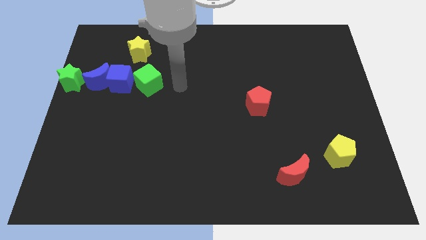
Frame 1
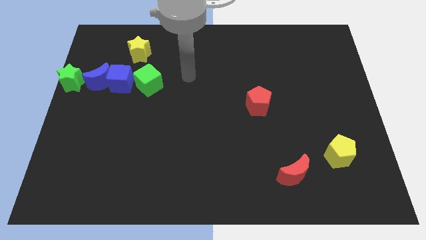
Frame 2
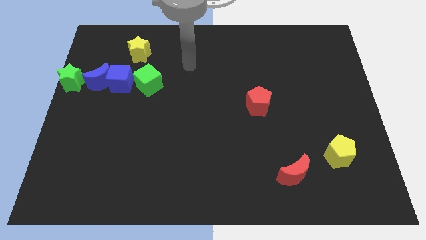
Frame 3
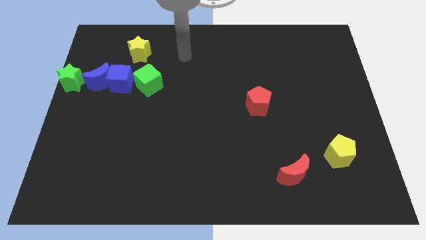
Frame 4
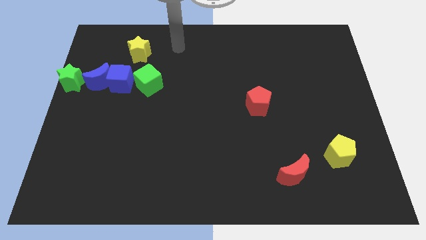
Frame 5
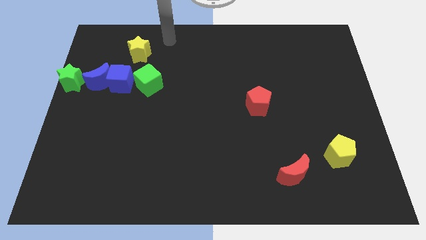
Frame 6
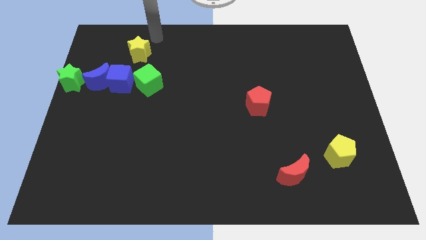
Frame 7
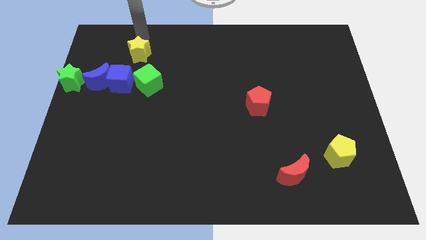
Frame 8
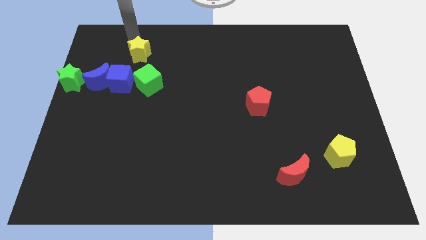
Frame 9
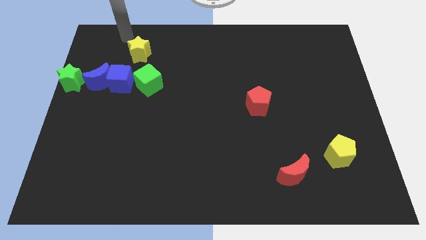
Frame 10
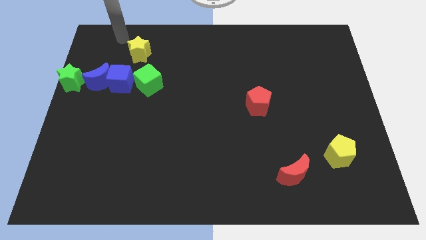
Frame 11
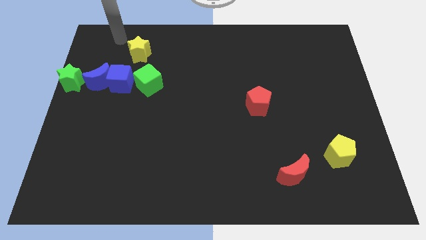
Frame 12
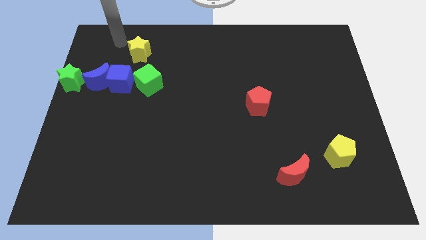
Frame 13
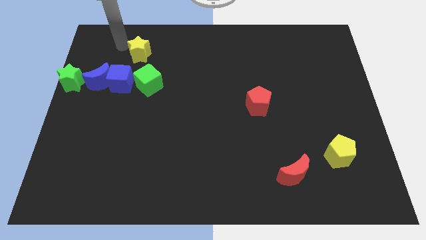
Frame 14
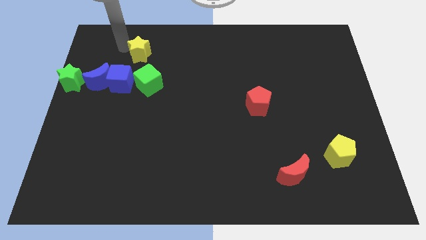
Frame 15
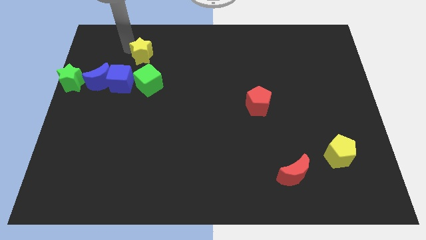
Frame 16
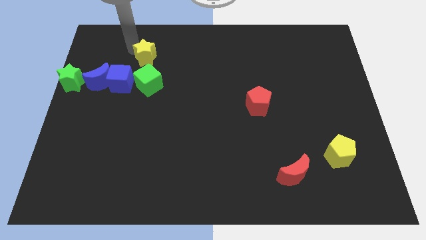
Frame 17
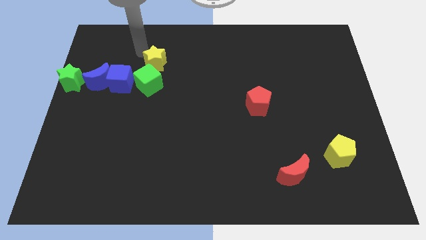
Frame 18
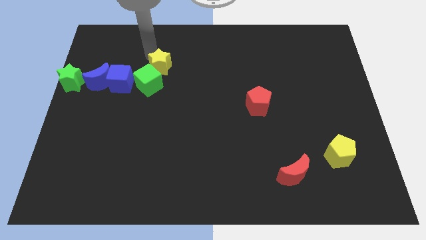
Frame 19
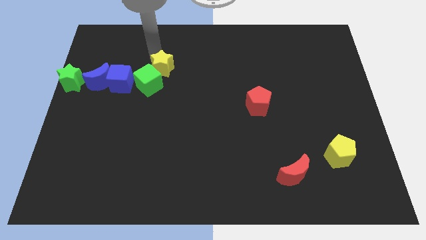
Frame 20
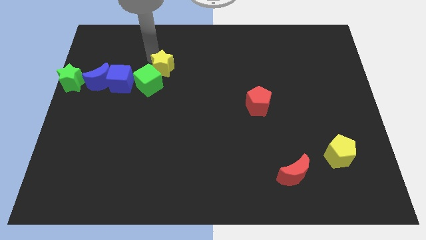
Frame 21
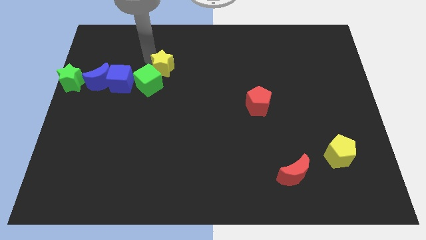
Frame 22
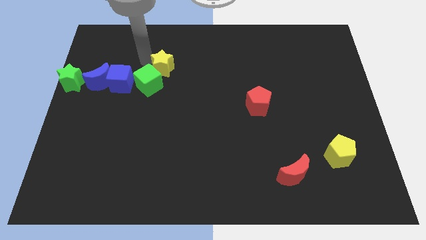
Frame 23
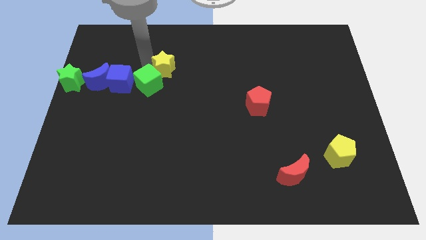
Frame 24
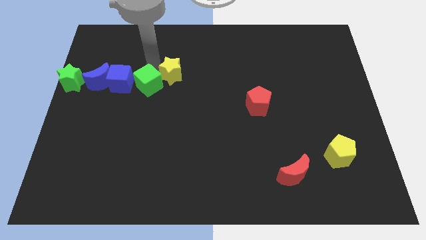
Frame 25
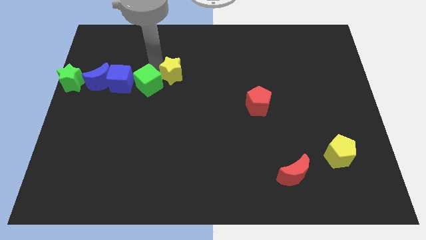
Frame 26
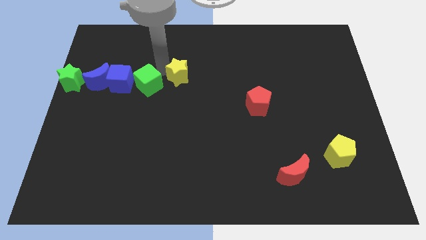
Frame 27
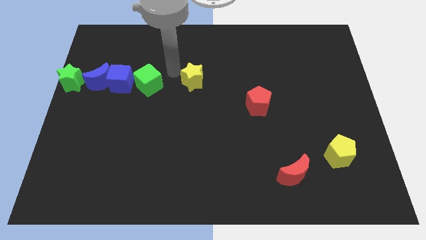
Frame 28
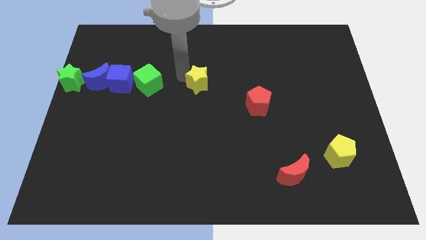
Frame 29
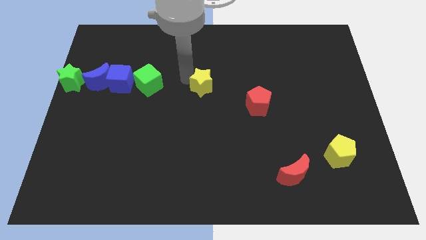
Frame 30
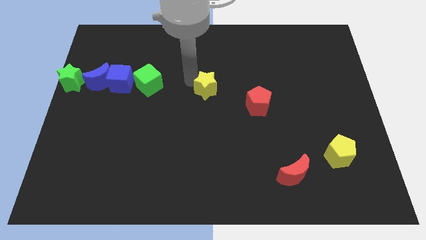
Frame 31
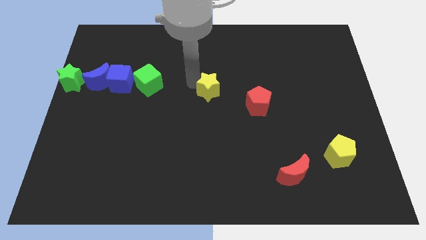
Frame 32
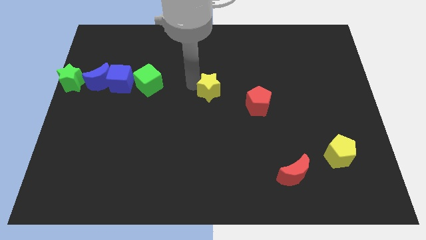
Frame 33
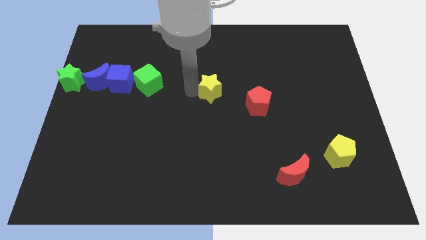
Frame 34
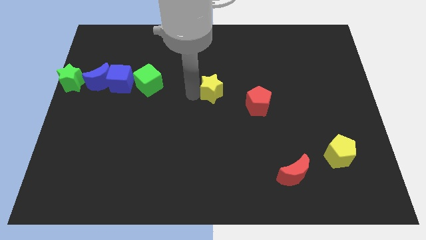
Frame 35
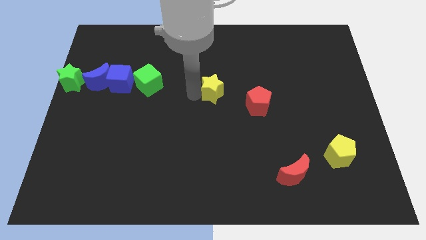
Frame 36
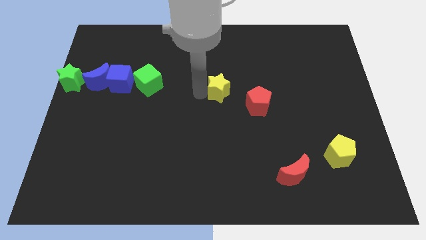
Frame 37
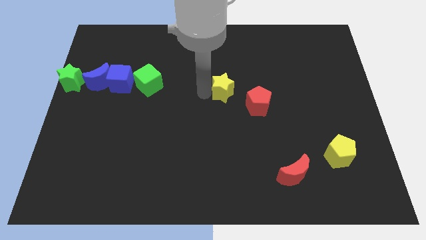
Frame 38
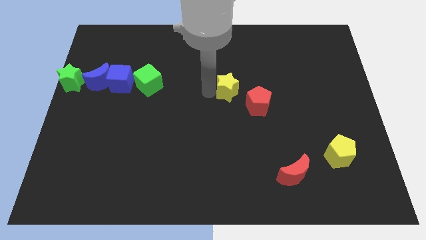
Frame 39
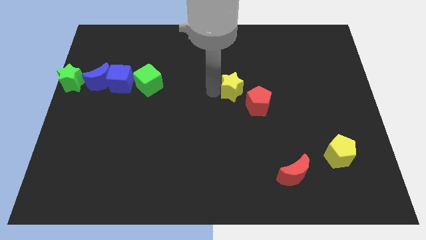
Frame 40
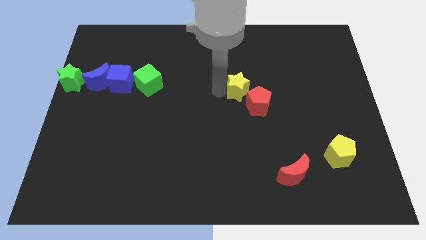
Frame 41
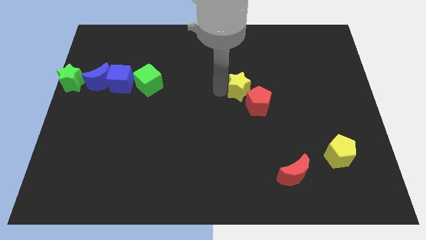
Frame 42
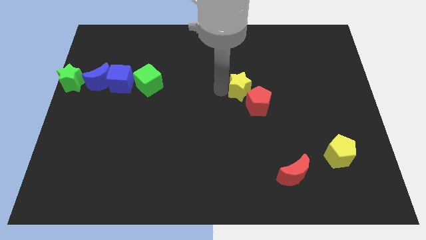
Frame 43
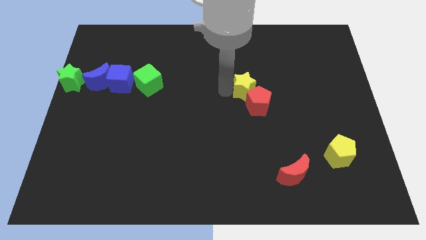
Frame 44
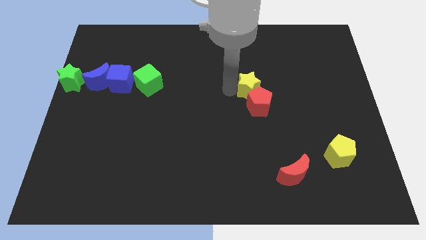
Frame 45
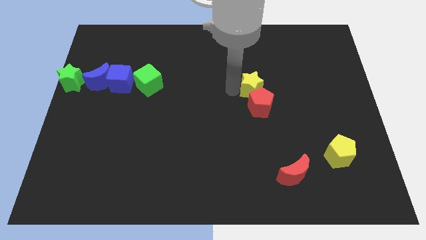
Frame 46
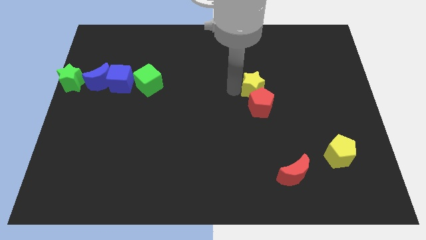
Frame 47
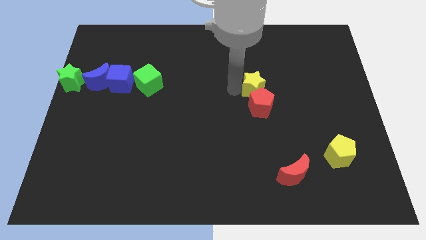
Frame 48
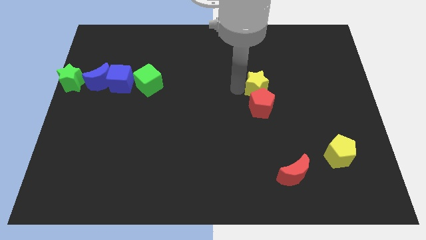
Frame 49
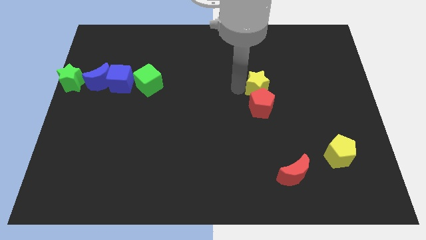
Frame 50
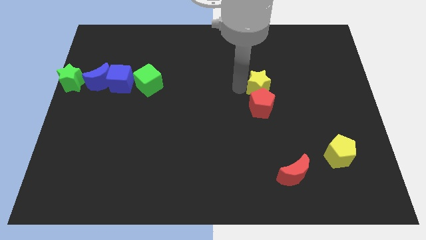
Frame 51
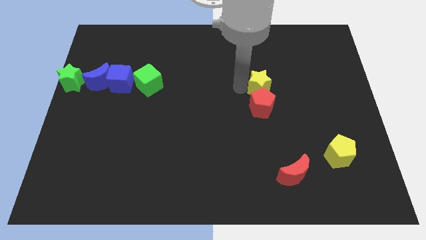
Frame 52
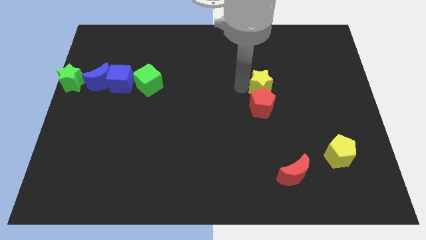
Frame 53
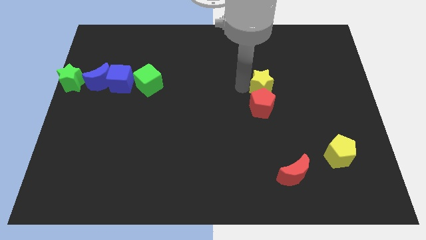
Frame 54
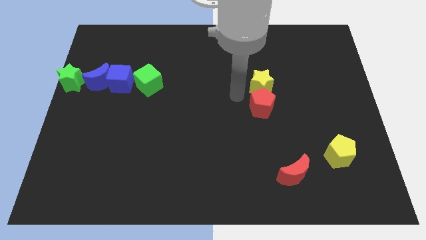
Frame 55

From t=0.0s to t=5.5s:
move the yellow star into the top side of the red pentagon

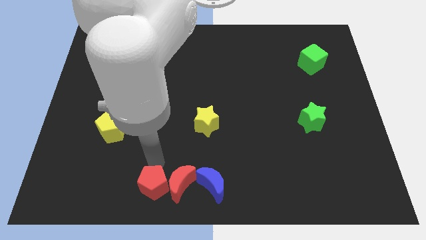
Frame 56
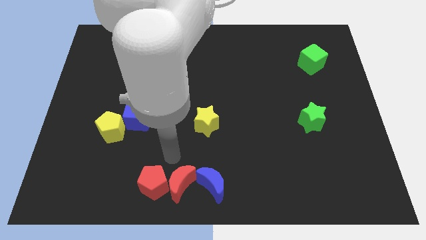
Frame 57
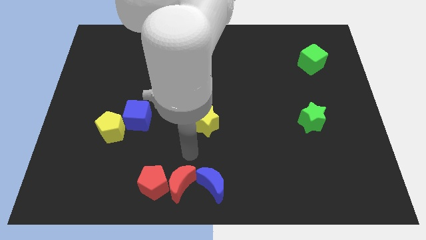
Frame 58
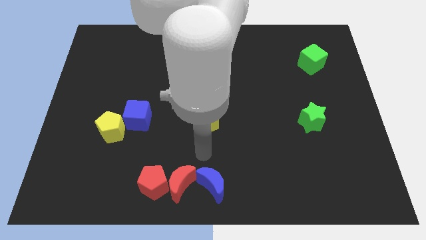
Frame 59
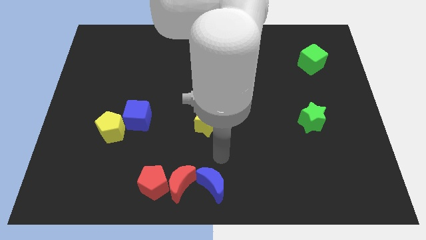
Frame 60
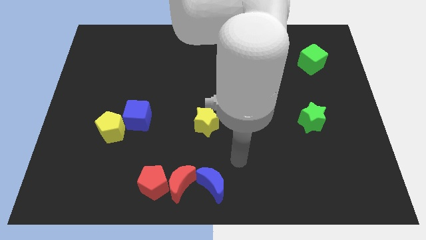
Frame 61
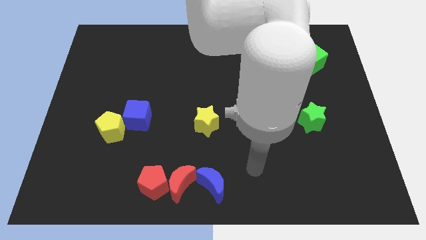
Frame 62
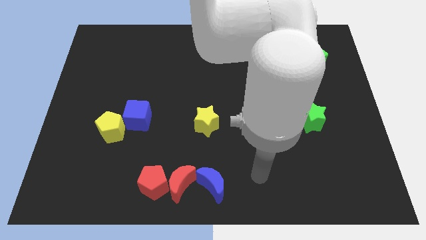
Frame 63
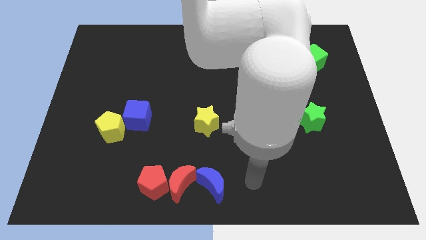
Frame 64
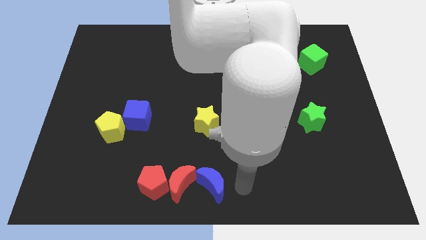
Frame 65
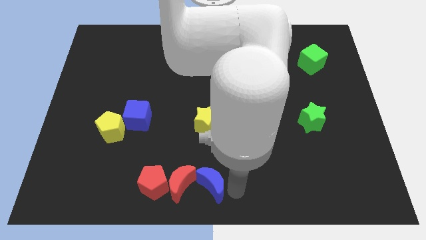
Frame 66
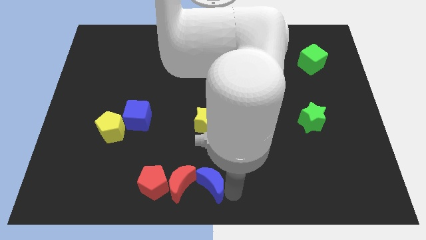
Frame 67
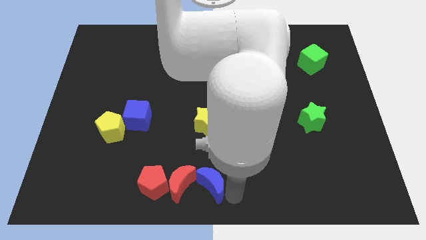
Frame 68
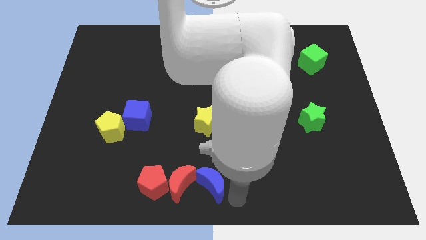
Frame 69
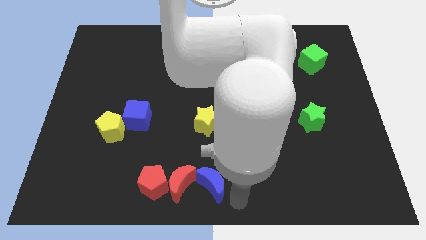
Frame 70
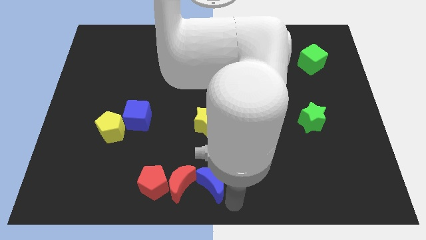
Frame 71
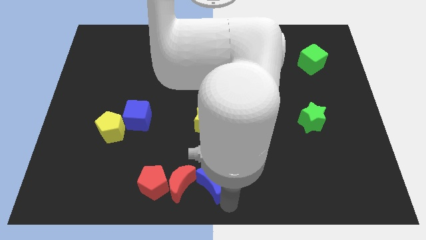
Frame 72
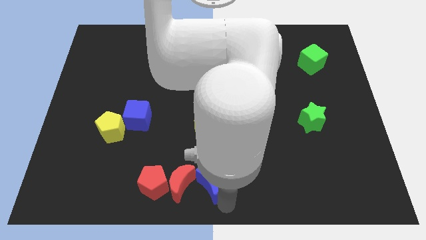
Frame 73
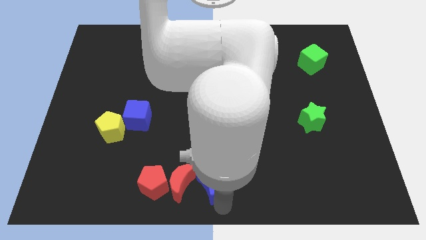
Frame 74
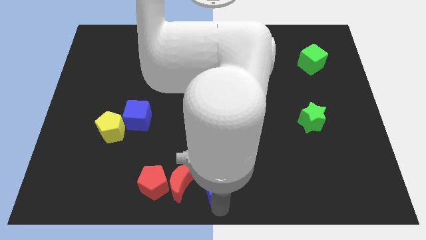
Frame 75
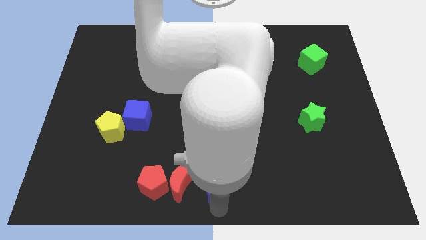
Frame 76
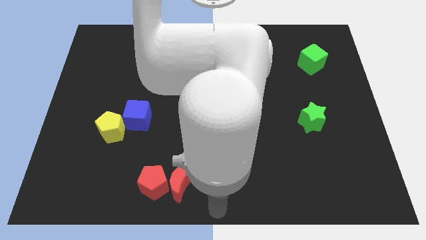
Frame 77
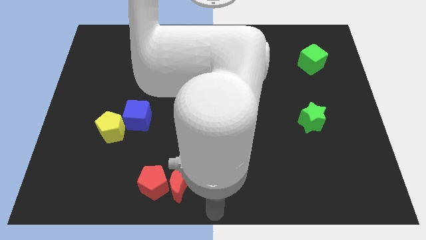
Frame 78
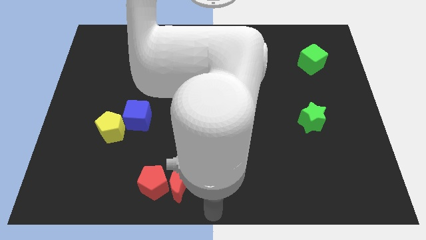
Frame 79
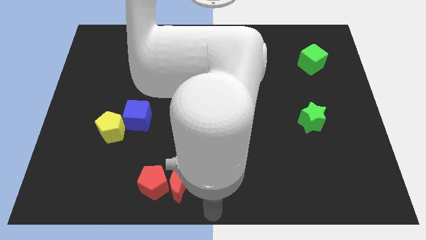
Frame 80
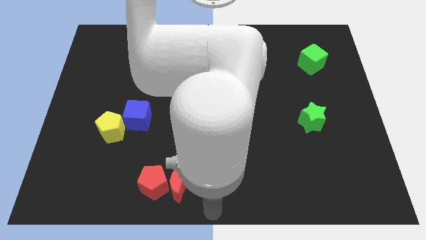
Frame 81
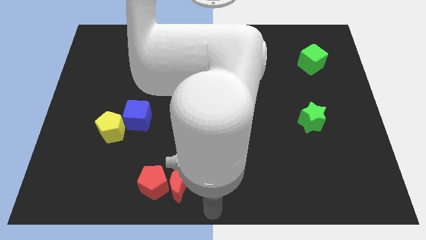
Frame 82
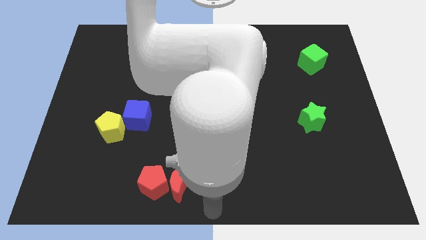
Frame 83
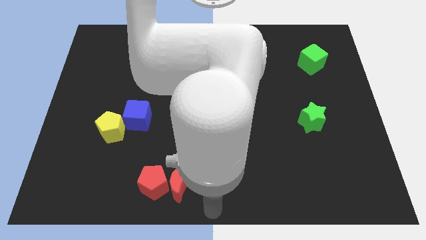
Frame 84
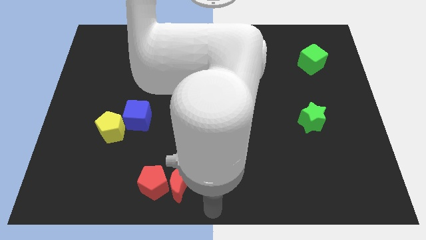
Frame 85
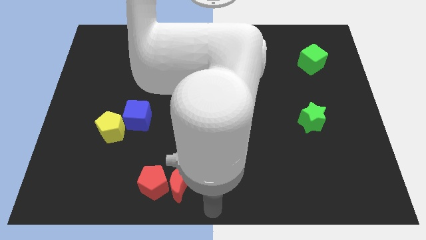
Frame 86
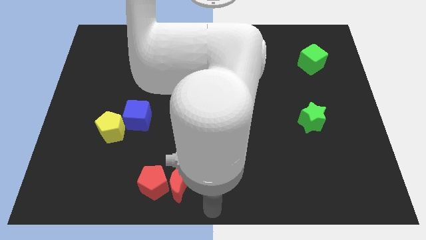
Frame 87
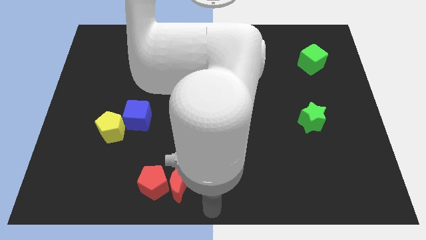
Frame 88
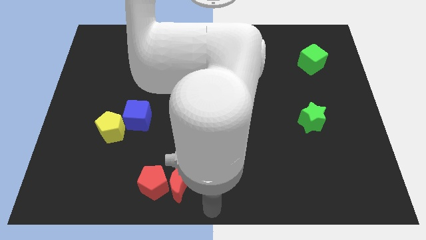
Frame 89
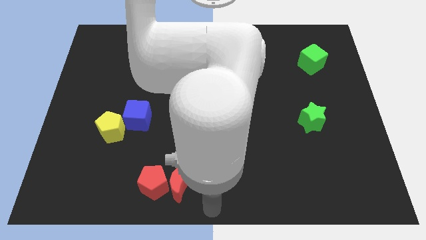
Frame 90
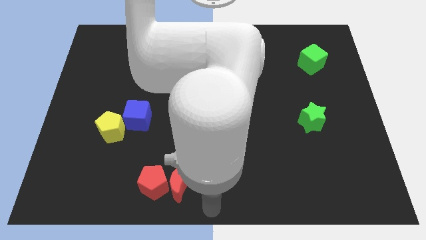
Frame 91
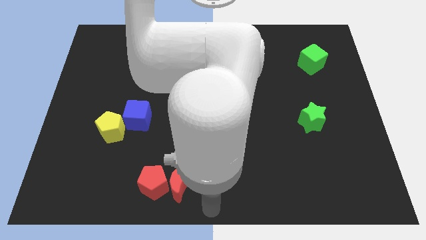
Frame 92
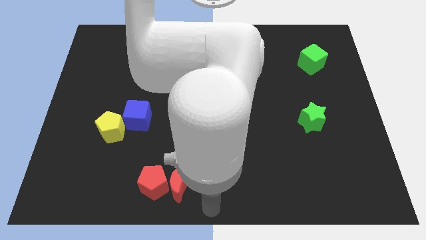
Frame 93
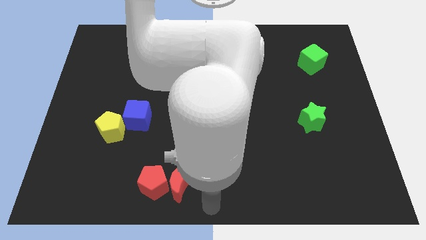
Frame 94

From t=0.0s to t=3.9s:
place the arm close to the blue crescent
